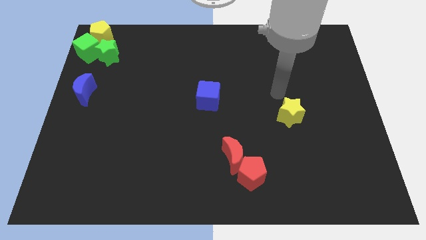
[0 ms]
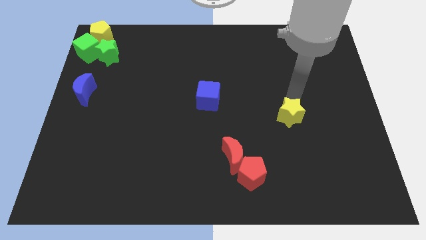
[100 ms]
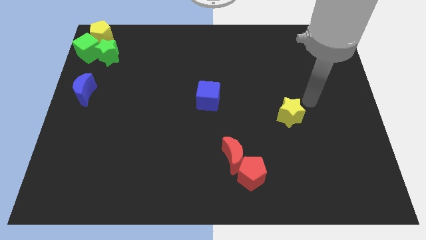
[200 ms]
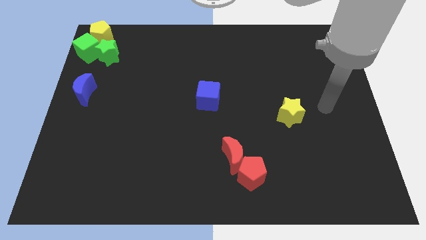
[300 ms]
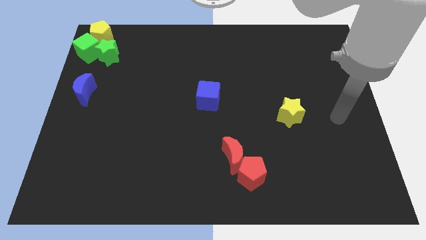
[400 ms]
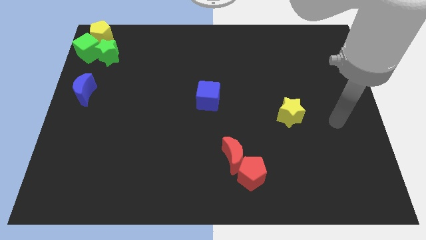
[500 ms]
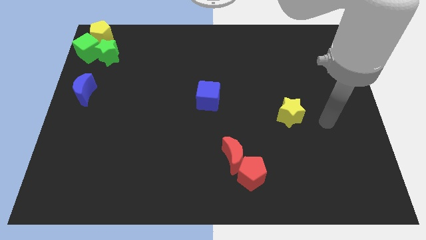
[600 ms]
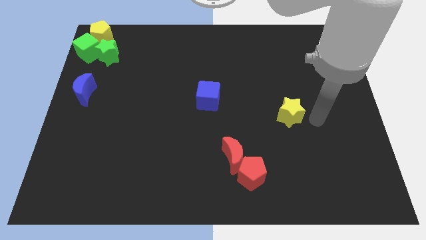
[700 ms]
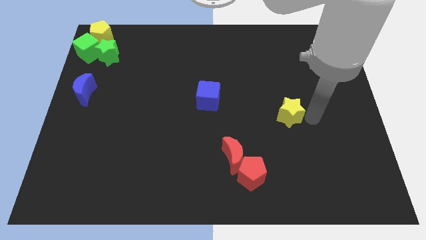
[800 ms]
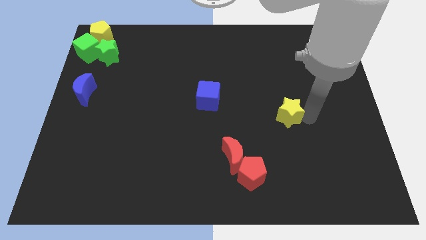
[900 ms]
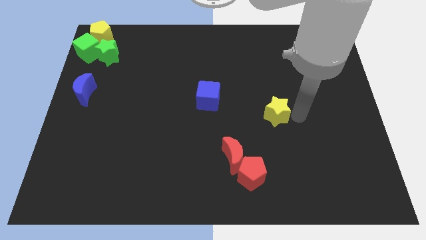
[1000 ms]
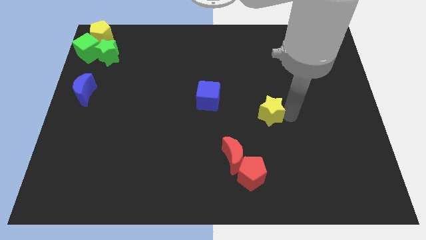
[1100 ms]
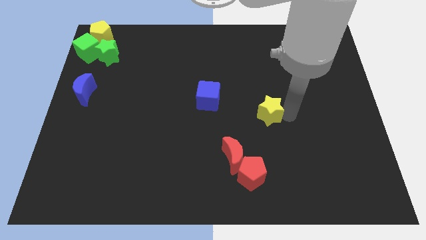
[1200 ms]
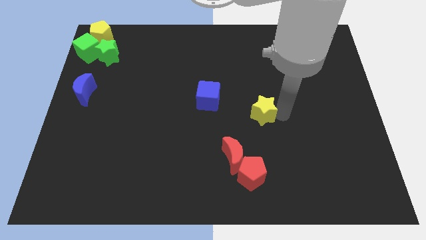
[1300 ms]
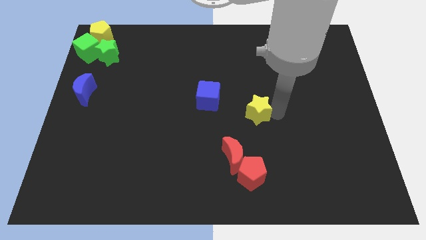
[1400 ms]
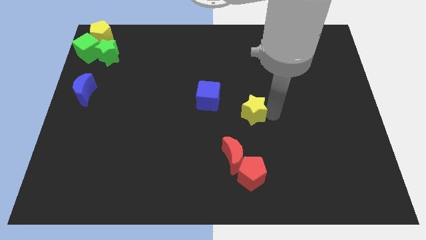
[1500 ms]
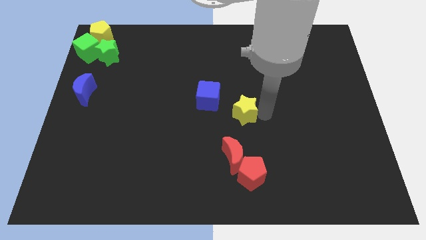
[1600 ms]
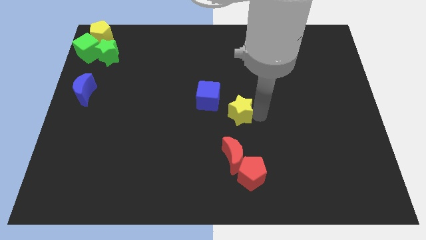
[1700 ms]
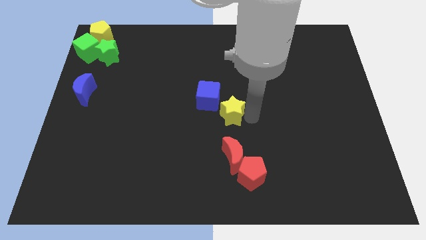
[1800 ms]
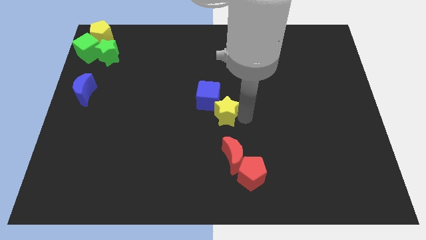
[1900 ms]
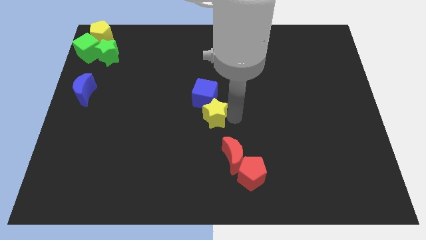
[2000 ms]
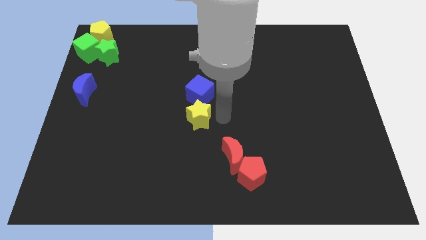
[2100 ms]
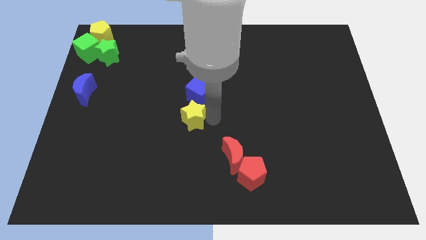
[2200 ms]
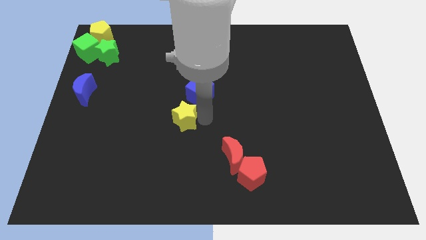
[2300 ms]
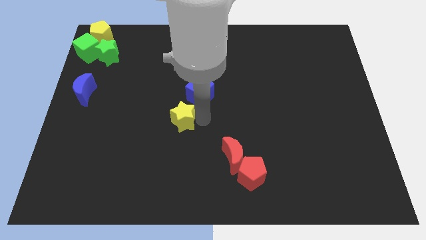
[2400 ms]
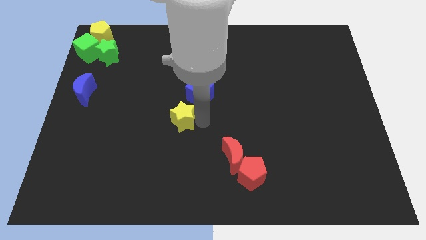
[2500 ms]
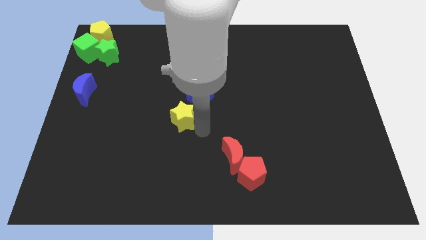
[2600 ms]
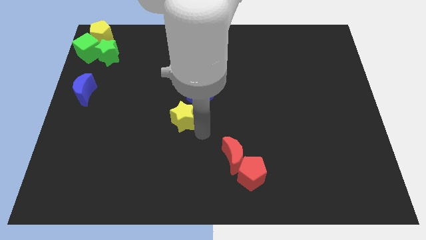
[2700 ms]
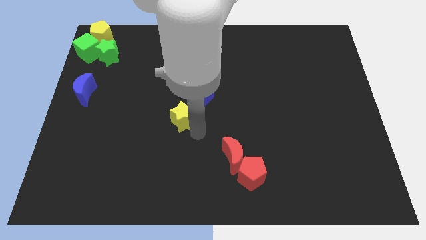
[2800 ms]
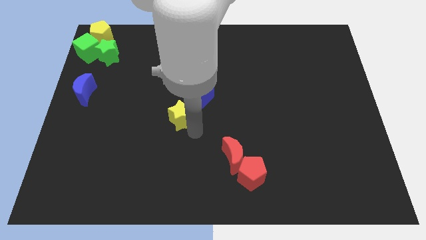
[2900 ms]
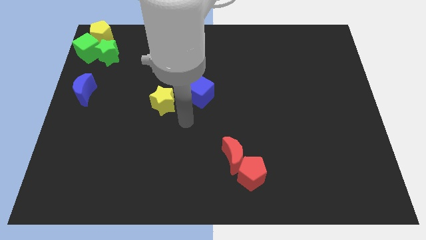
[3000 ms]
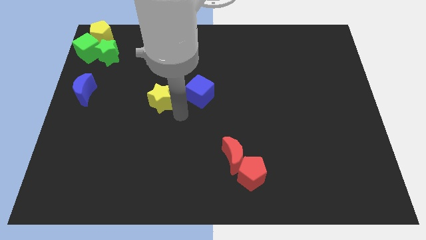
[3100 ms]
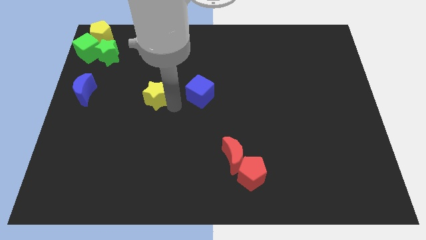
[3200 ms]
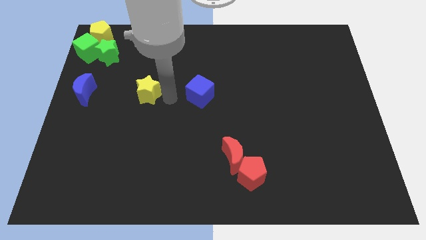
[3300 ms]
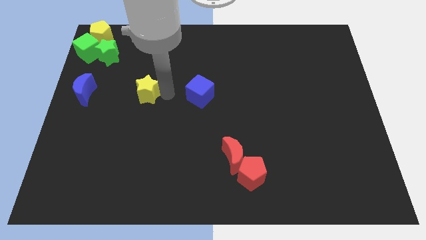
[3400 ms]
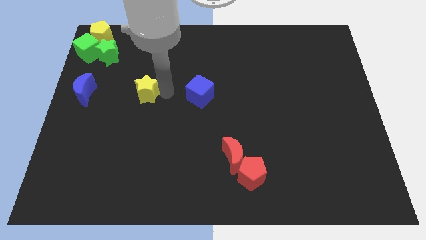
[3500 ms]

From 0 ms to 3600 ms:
move the yellow star between the blue blocks

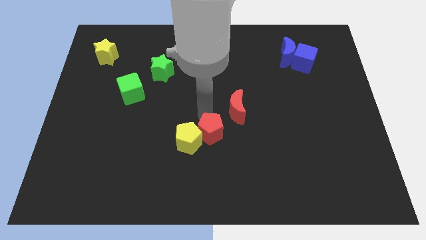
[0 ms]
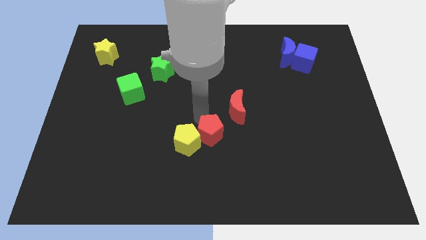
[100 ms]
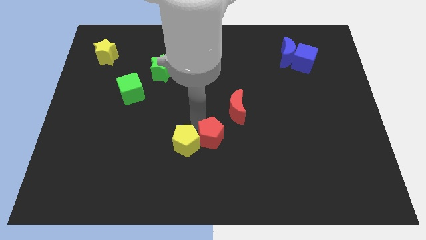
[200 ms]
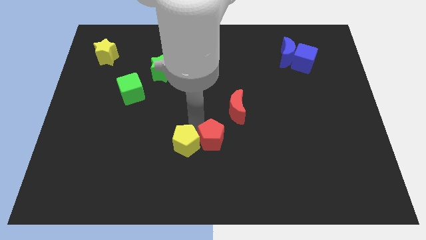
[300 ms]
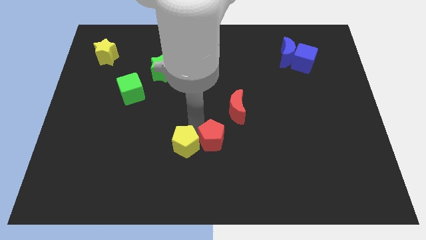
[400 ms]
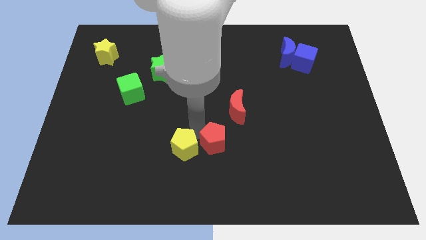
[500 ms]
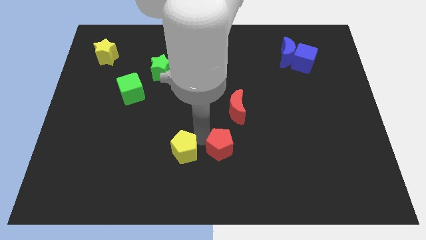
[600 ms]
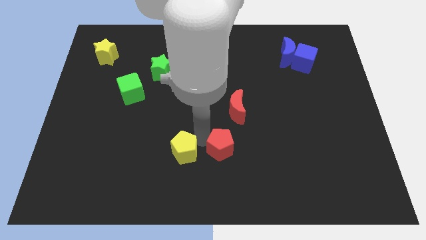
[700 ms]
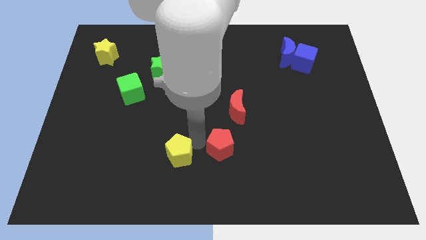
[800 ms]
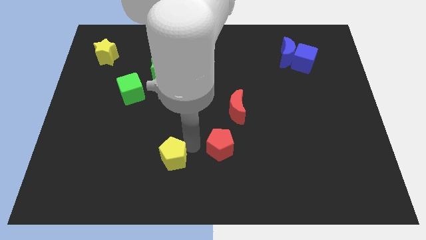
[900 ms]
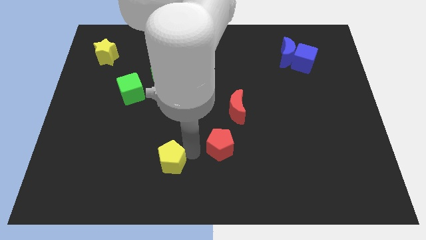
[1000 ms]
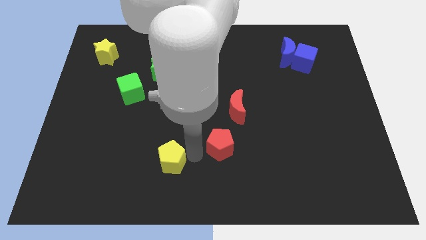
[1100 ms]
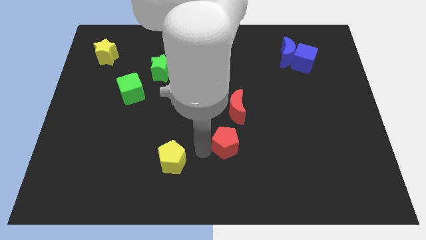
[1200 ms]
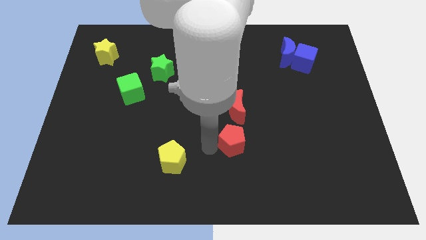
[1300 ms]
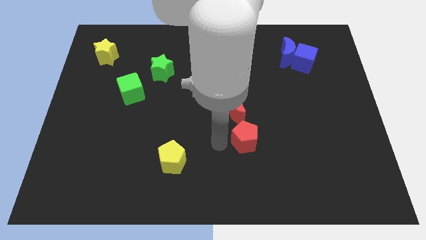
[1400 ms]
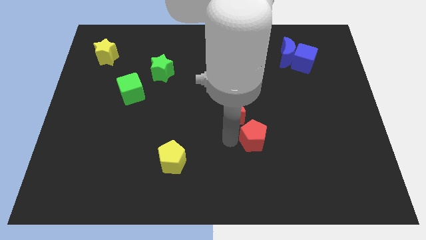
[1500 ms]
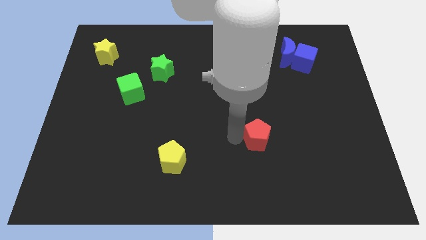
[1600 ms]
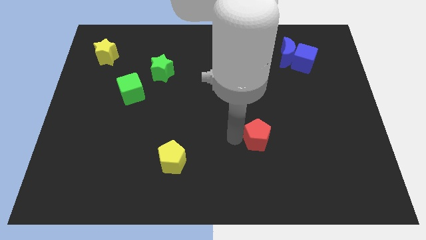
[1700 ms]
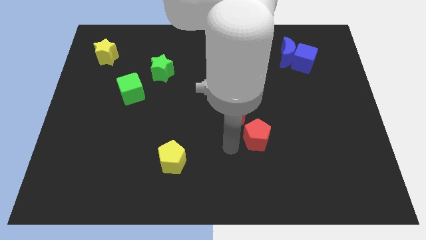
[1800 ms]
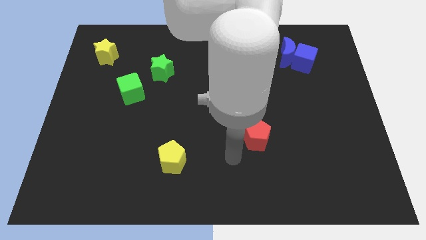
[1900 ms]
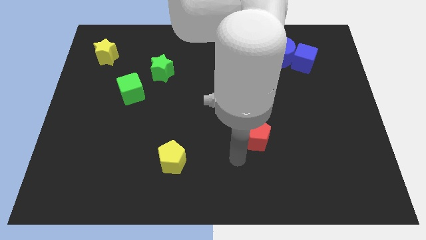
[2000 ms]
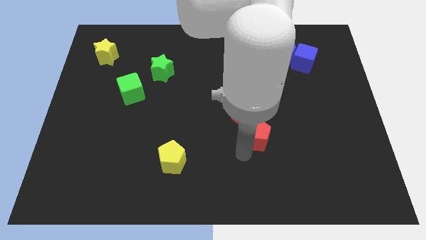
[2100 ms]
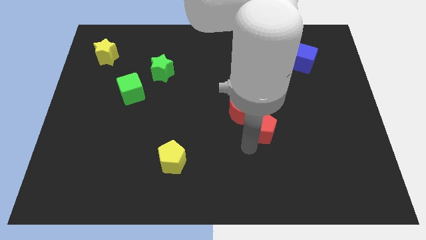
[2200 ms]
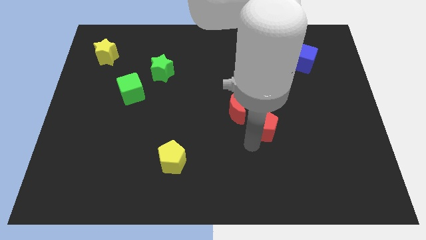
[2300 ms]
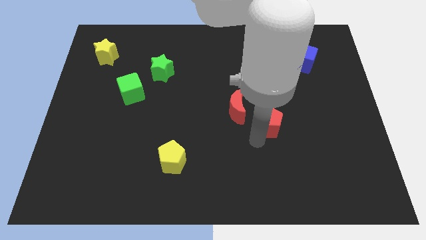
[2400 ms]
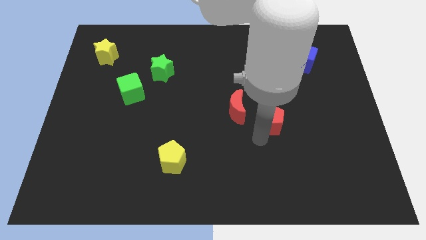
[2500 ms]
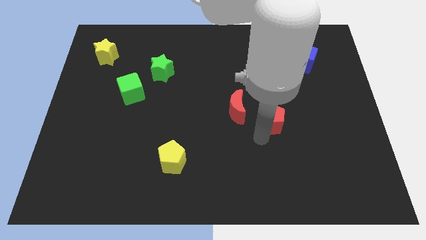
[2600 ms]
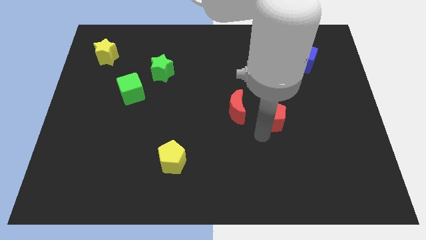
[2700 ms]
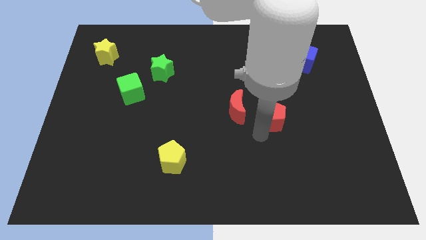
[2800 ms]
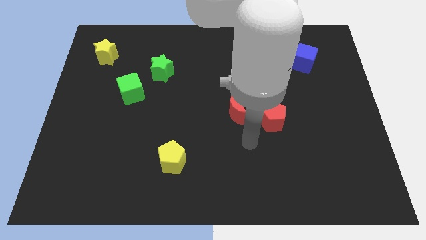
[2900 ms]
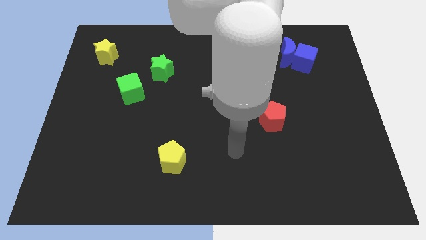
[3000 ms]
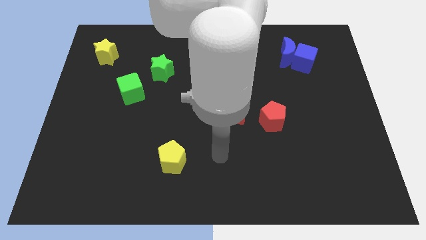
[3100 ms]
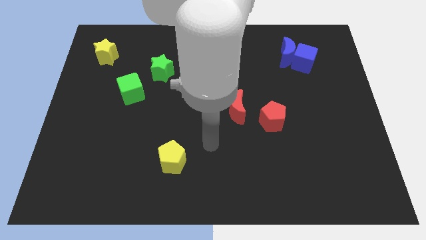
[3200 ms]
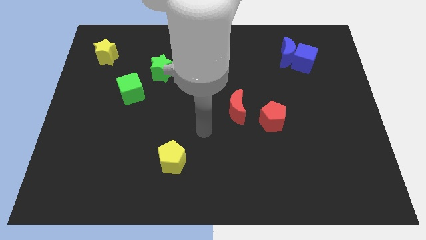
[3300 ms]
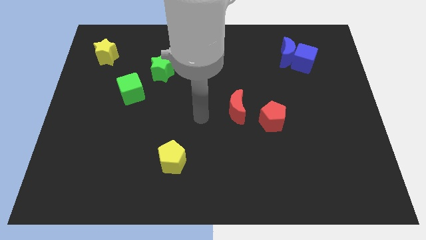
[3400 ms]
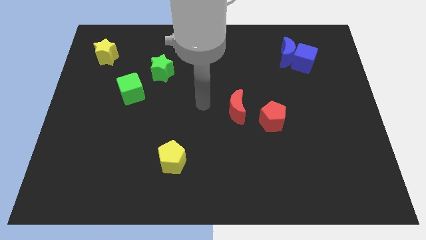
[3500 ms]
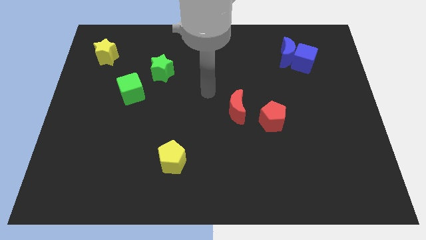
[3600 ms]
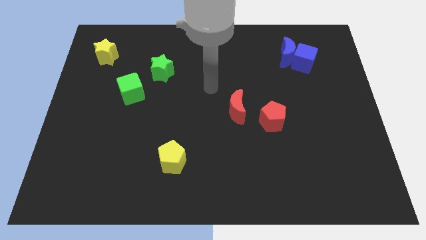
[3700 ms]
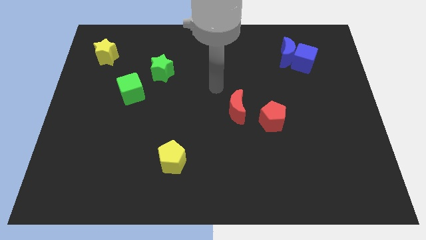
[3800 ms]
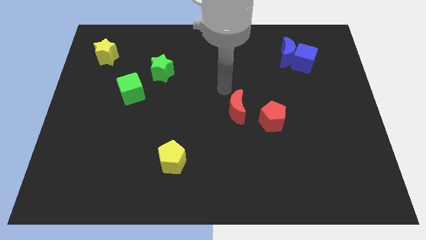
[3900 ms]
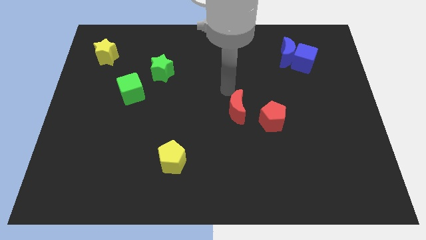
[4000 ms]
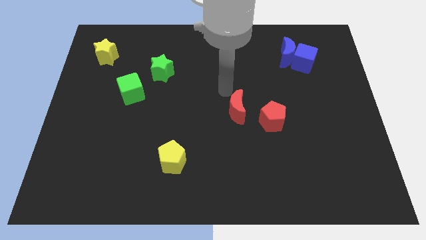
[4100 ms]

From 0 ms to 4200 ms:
place the red pentagon right to the red moon

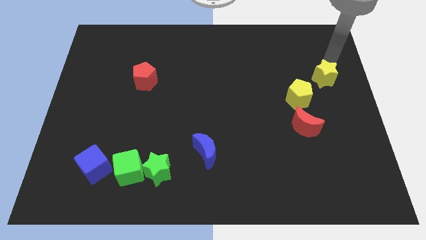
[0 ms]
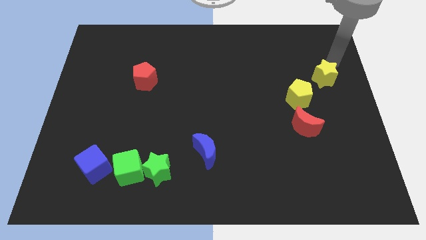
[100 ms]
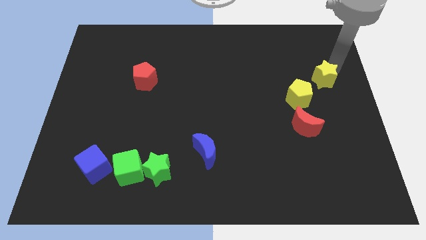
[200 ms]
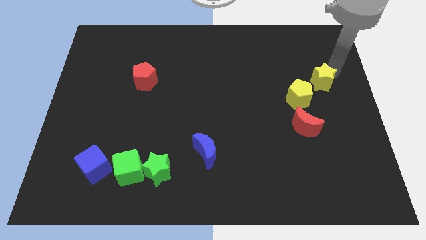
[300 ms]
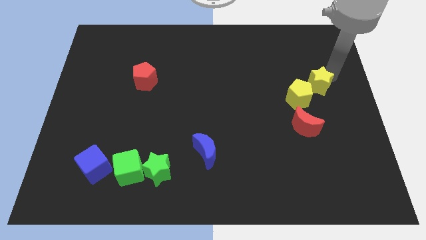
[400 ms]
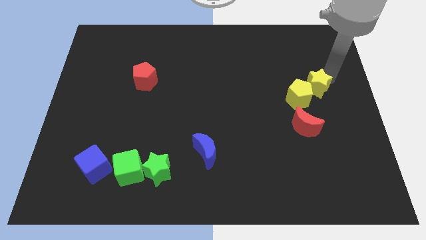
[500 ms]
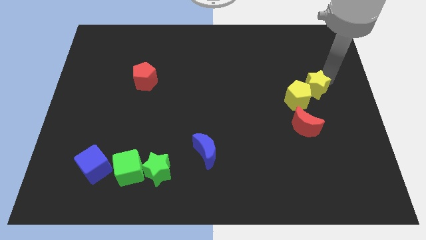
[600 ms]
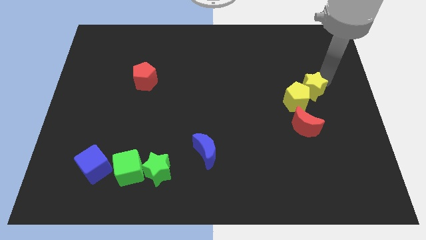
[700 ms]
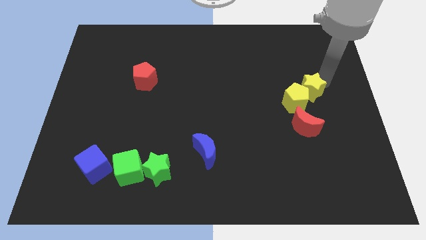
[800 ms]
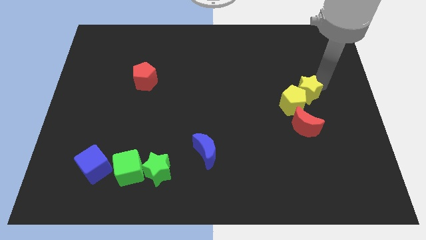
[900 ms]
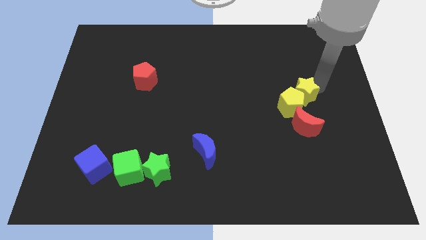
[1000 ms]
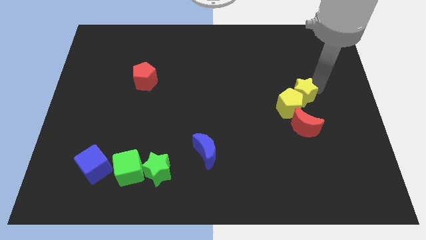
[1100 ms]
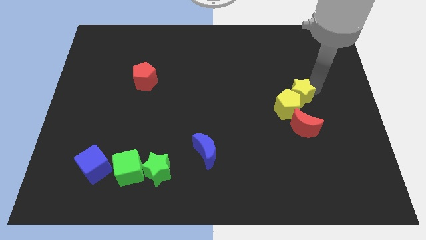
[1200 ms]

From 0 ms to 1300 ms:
push the yellow blocks into the red crescent
